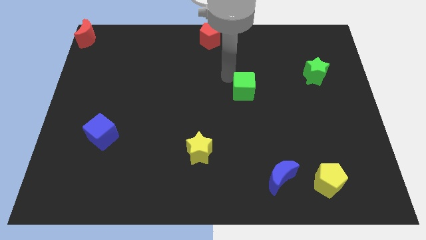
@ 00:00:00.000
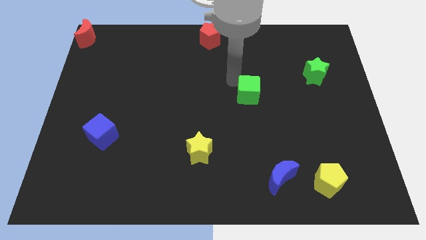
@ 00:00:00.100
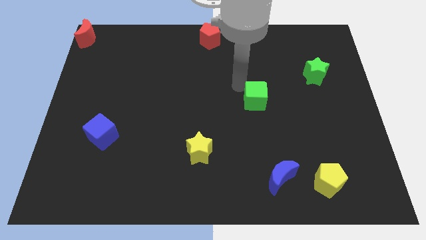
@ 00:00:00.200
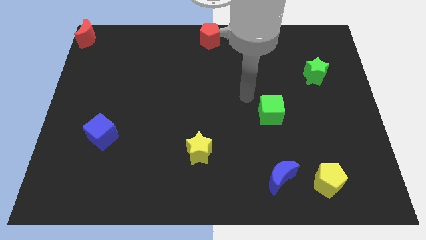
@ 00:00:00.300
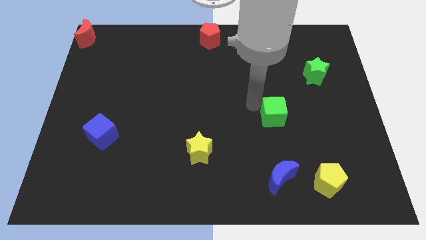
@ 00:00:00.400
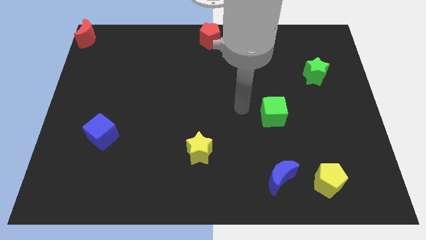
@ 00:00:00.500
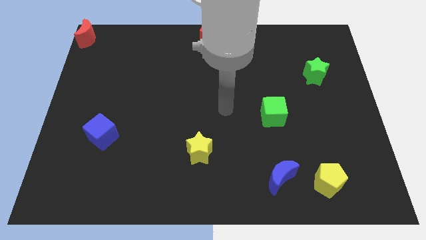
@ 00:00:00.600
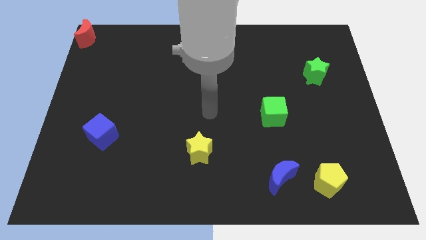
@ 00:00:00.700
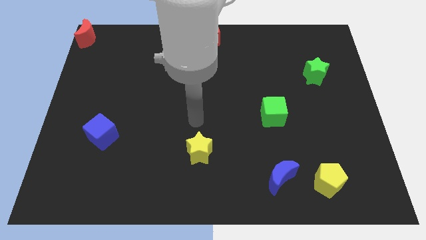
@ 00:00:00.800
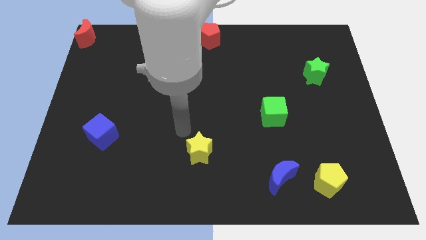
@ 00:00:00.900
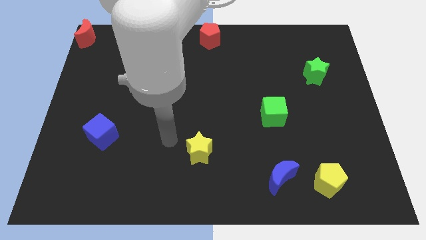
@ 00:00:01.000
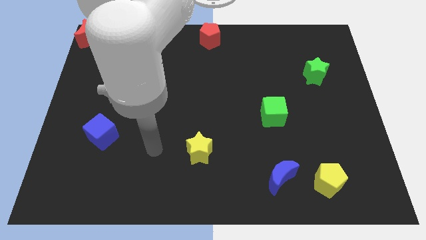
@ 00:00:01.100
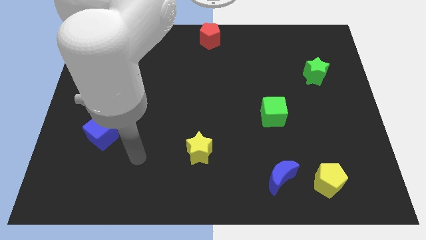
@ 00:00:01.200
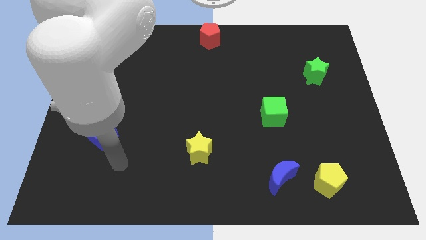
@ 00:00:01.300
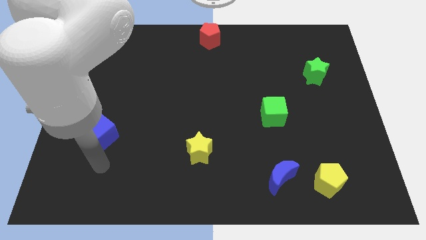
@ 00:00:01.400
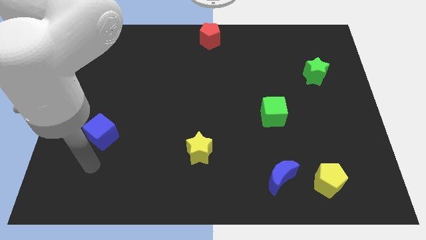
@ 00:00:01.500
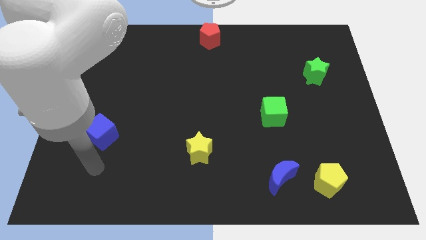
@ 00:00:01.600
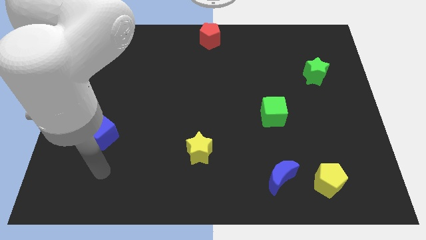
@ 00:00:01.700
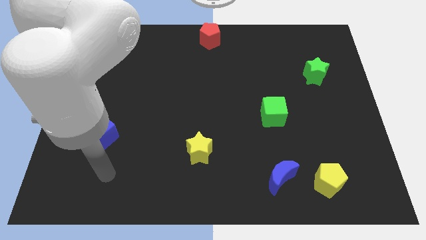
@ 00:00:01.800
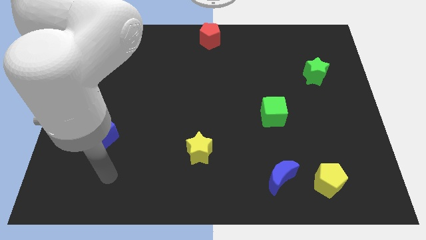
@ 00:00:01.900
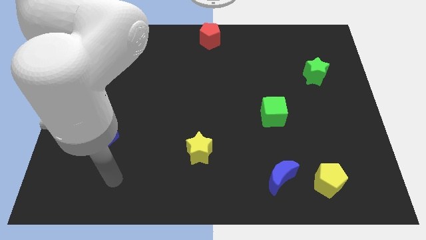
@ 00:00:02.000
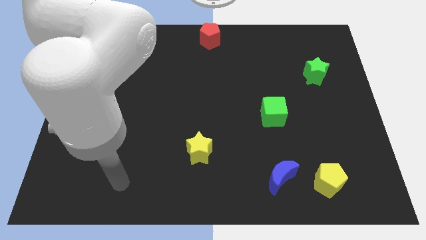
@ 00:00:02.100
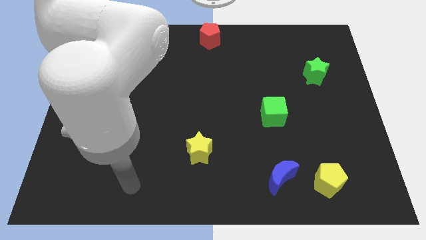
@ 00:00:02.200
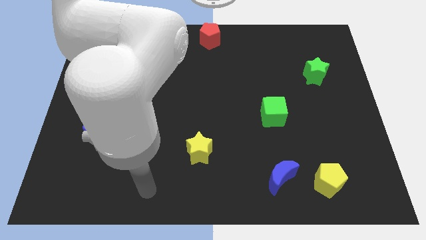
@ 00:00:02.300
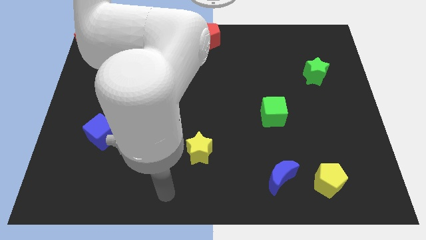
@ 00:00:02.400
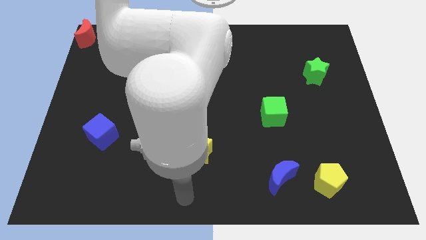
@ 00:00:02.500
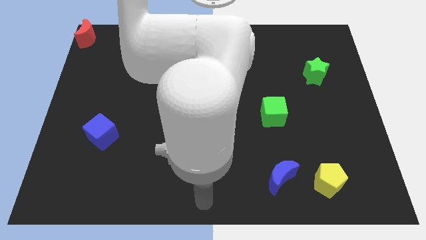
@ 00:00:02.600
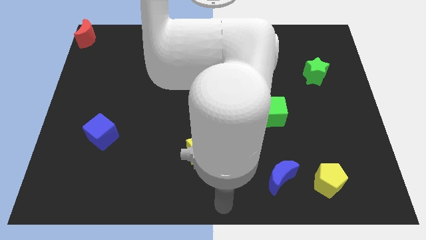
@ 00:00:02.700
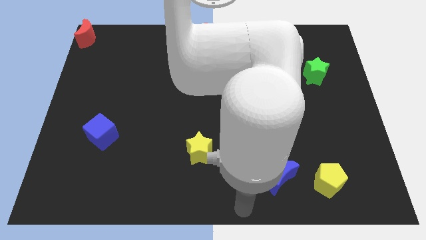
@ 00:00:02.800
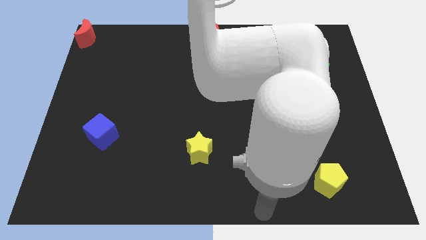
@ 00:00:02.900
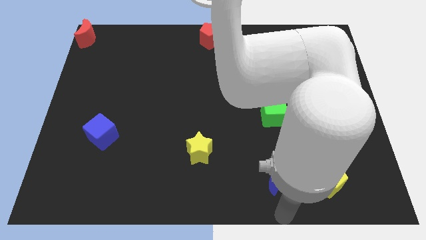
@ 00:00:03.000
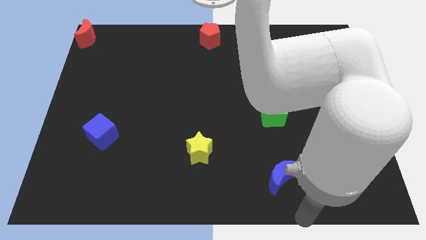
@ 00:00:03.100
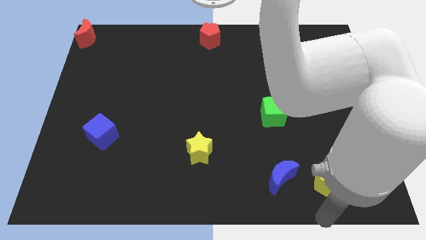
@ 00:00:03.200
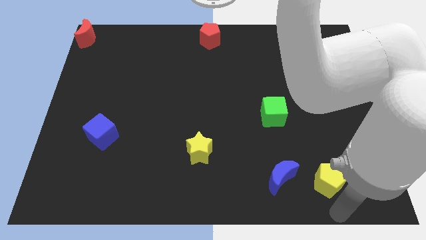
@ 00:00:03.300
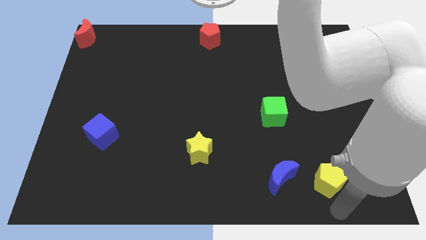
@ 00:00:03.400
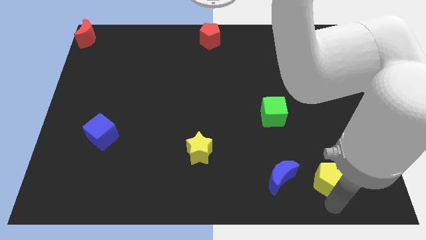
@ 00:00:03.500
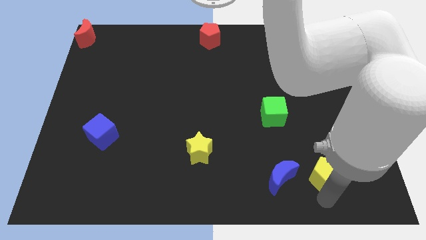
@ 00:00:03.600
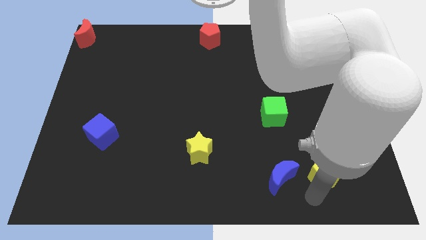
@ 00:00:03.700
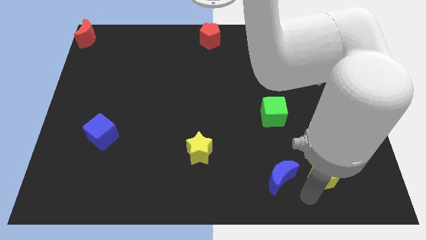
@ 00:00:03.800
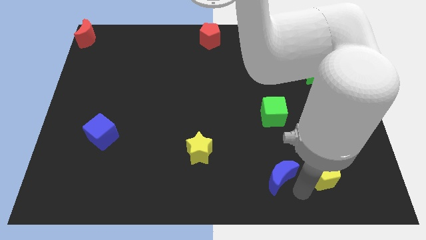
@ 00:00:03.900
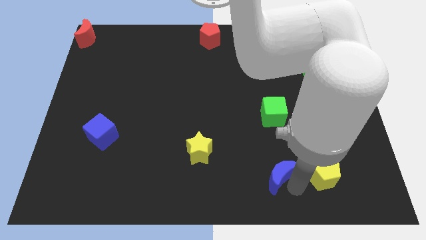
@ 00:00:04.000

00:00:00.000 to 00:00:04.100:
slightly move the yellow pentagon up

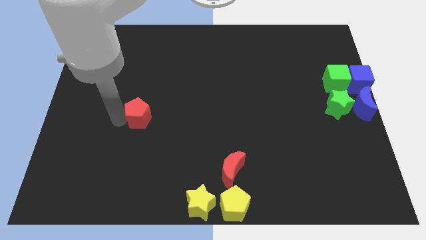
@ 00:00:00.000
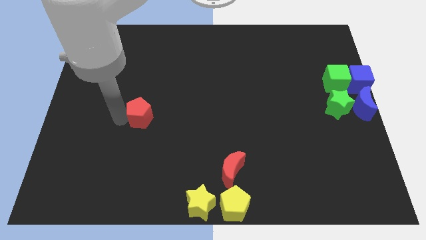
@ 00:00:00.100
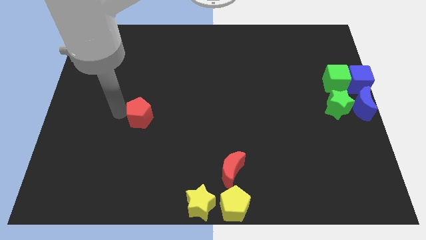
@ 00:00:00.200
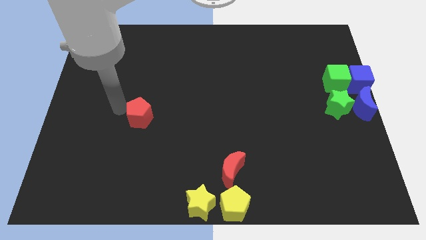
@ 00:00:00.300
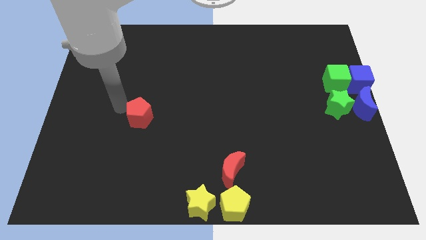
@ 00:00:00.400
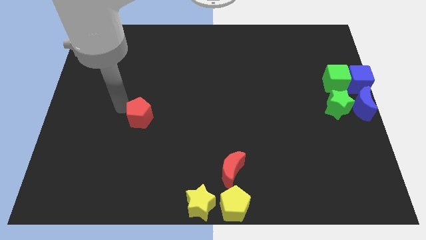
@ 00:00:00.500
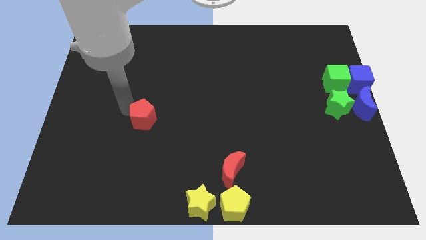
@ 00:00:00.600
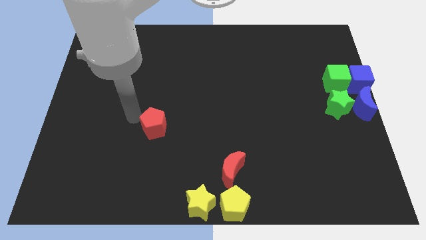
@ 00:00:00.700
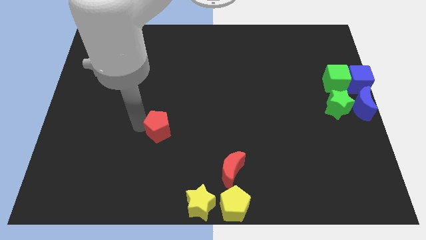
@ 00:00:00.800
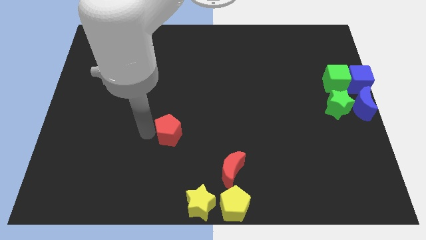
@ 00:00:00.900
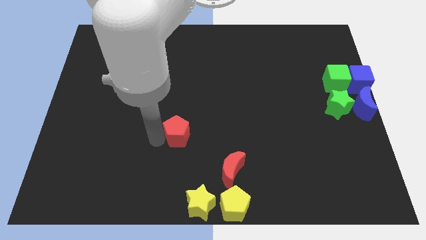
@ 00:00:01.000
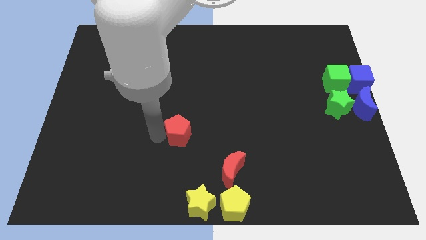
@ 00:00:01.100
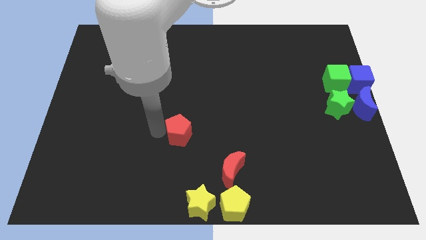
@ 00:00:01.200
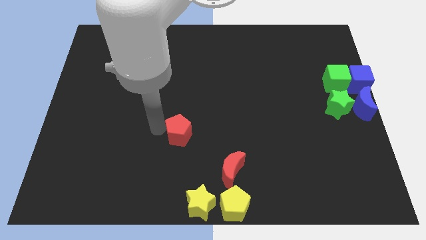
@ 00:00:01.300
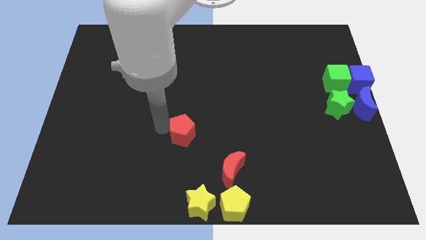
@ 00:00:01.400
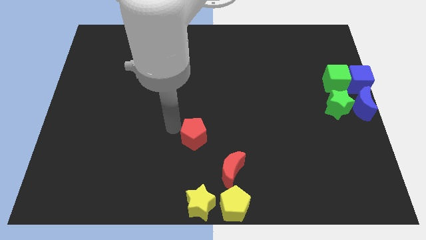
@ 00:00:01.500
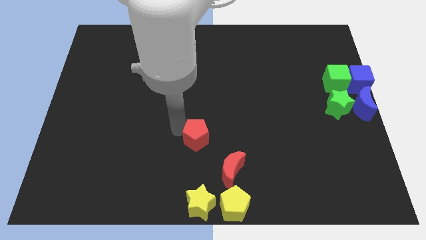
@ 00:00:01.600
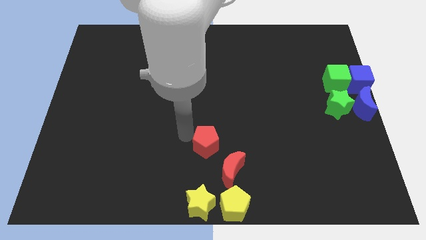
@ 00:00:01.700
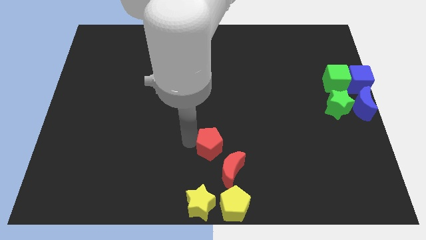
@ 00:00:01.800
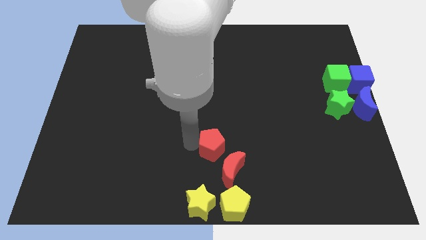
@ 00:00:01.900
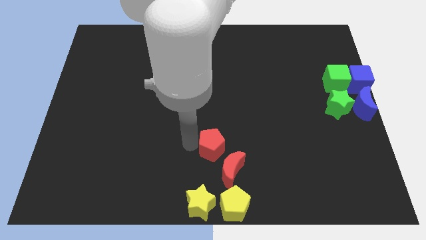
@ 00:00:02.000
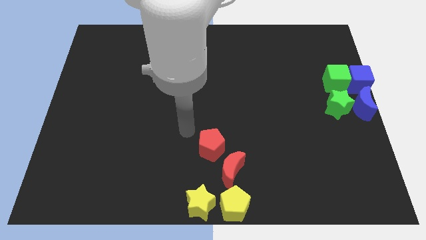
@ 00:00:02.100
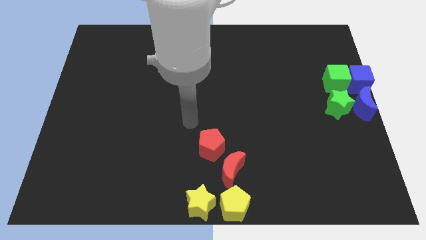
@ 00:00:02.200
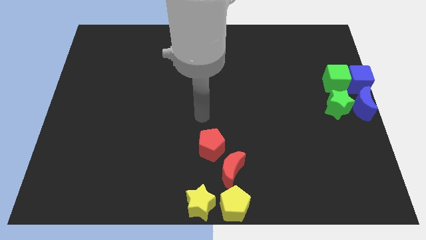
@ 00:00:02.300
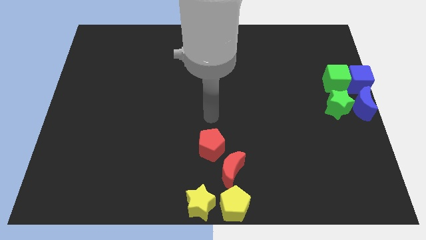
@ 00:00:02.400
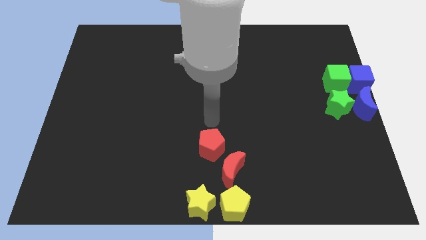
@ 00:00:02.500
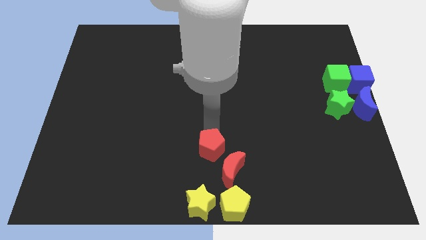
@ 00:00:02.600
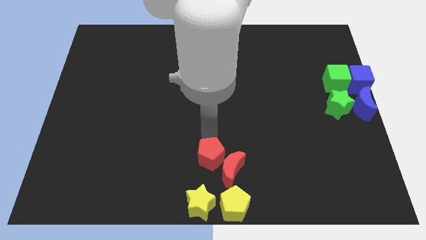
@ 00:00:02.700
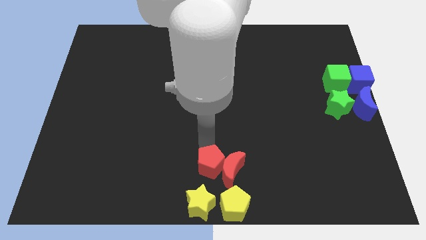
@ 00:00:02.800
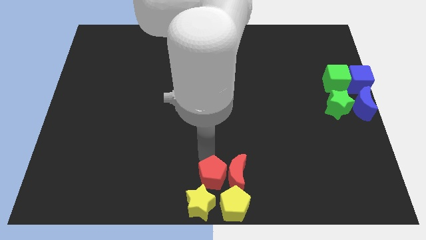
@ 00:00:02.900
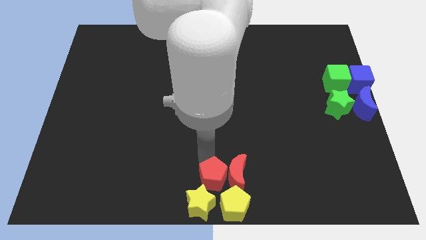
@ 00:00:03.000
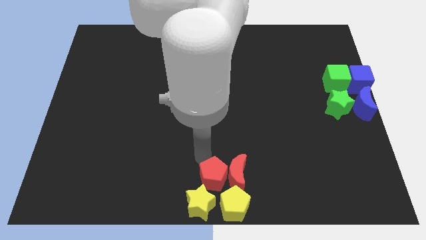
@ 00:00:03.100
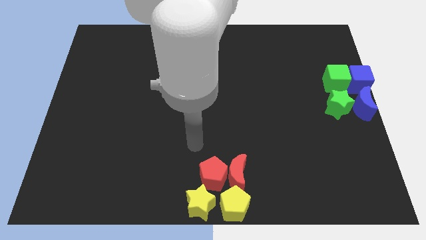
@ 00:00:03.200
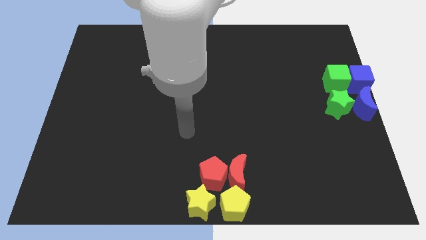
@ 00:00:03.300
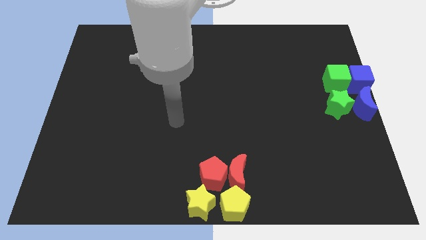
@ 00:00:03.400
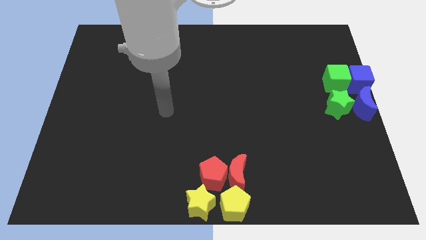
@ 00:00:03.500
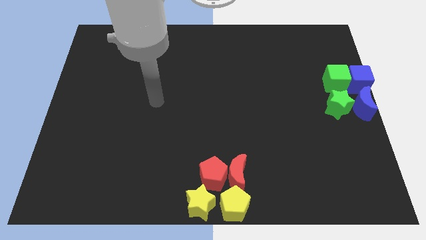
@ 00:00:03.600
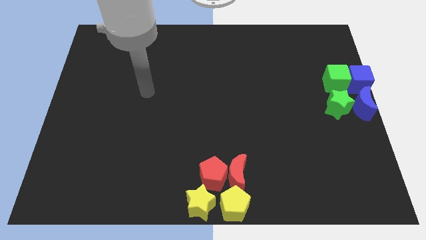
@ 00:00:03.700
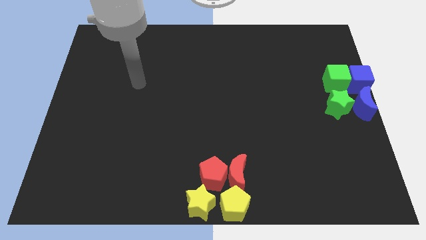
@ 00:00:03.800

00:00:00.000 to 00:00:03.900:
move the red pentagon into the red crescent

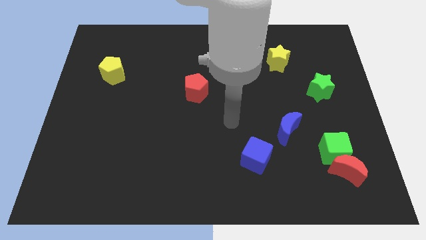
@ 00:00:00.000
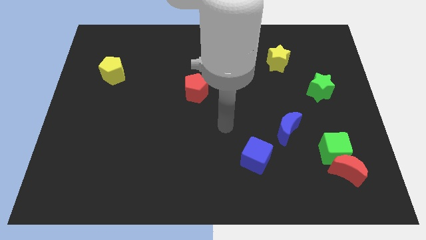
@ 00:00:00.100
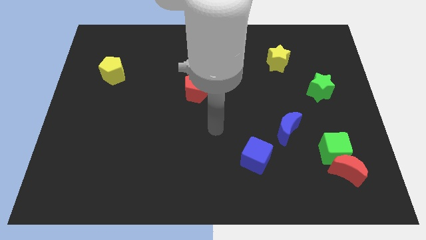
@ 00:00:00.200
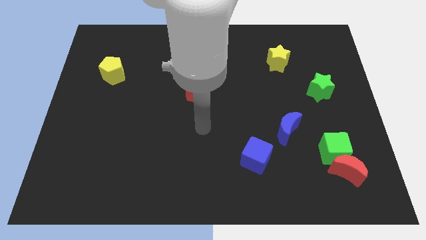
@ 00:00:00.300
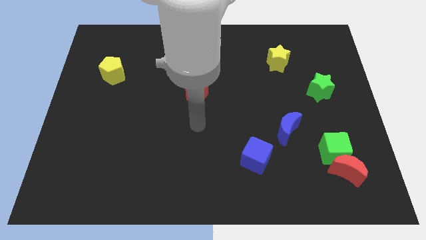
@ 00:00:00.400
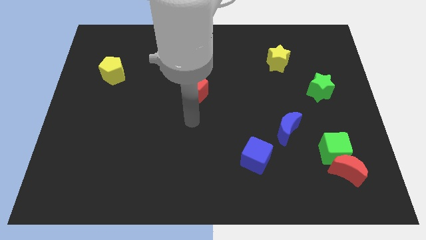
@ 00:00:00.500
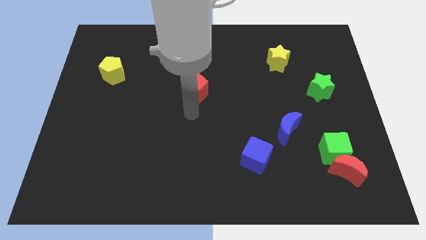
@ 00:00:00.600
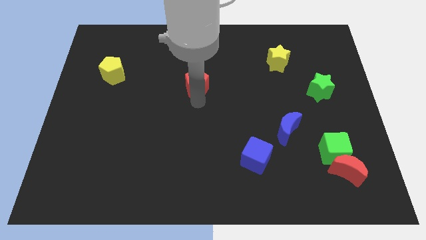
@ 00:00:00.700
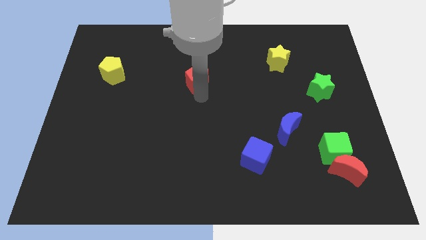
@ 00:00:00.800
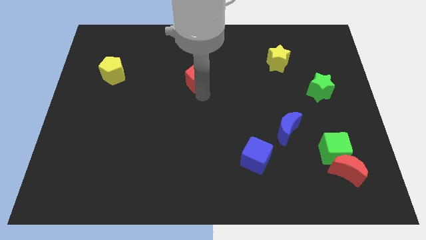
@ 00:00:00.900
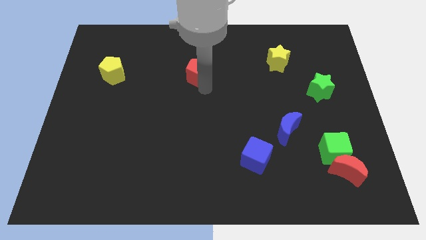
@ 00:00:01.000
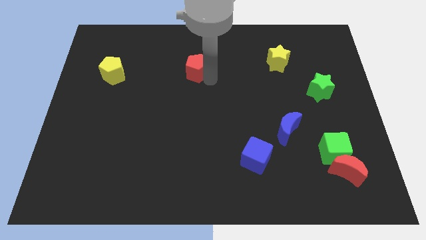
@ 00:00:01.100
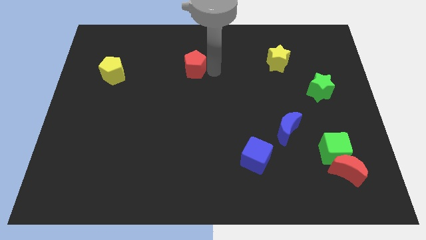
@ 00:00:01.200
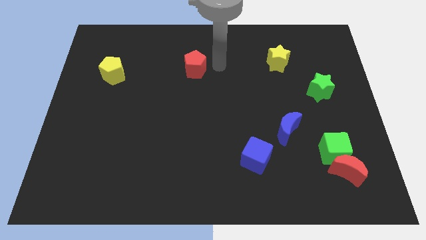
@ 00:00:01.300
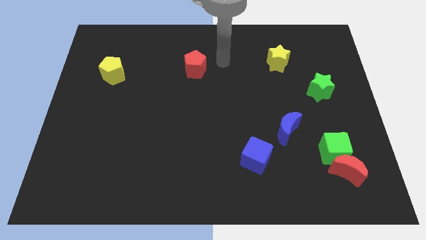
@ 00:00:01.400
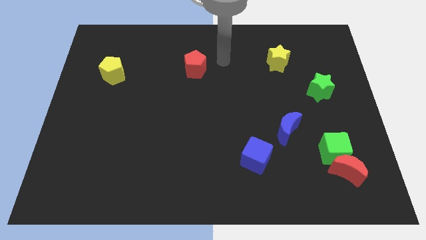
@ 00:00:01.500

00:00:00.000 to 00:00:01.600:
move the red pentagon to the top of the board slightly
